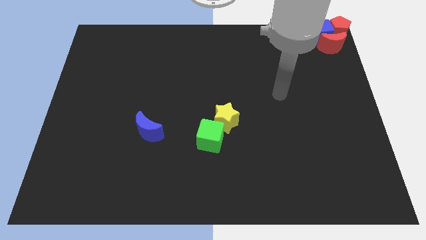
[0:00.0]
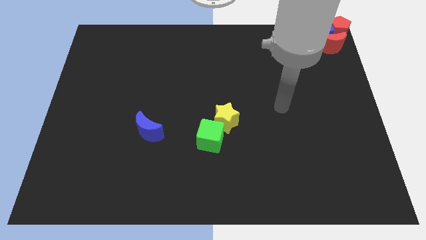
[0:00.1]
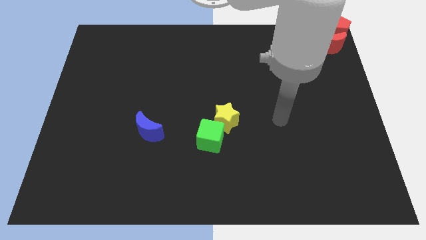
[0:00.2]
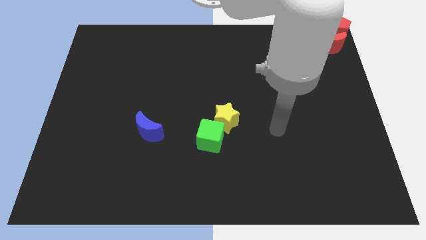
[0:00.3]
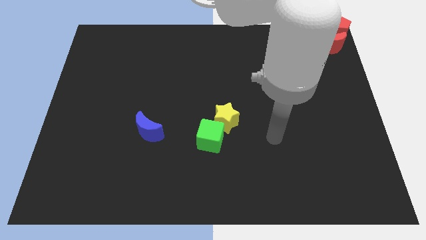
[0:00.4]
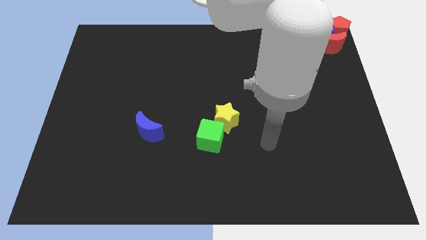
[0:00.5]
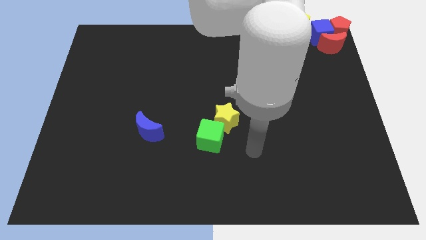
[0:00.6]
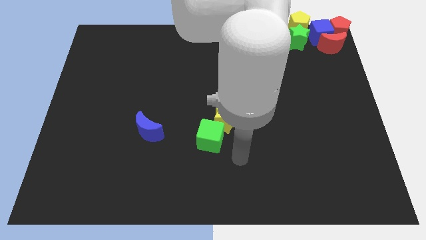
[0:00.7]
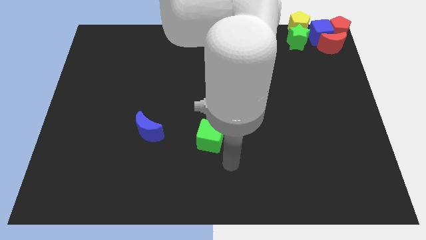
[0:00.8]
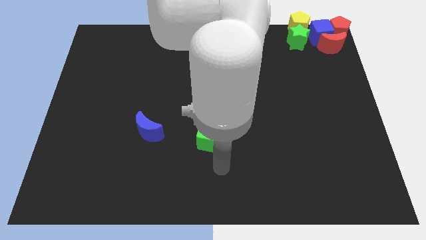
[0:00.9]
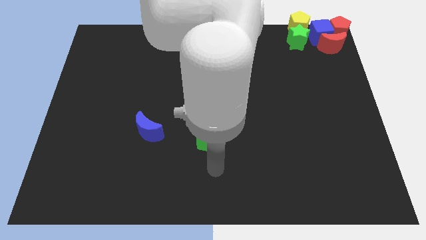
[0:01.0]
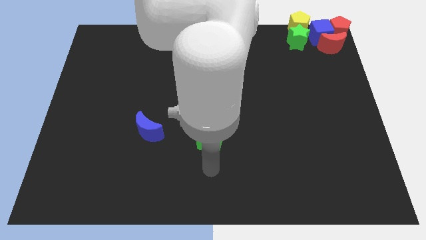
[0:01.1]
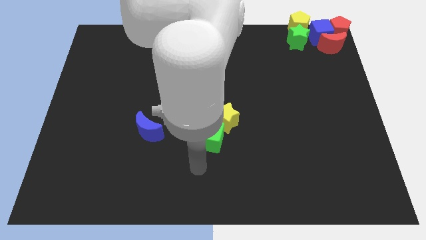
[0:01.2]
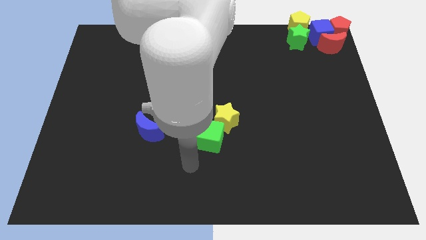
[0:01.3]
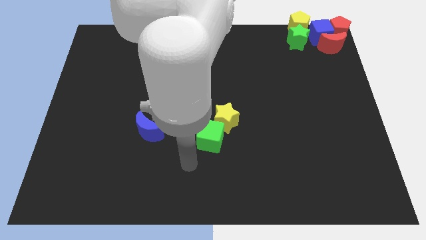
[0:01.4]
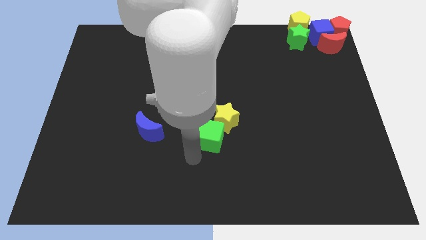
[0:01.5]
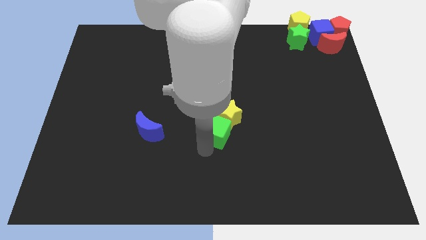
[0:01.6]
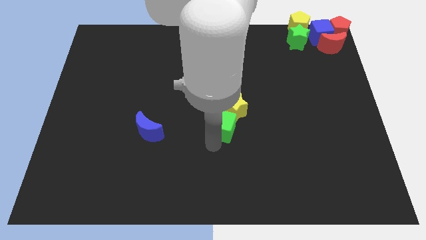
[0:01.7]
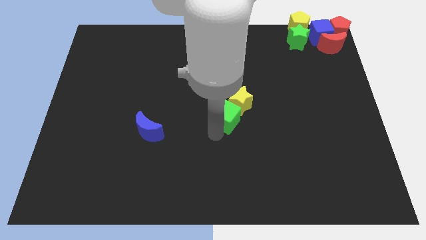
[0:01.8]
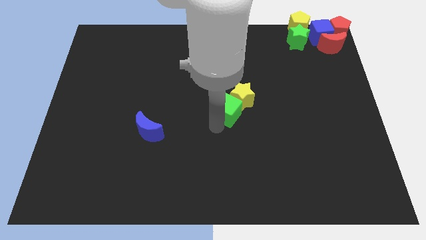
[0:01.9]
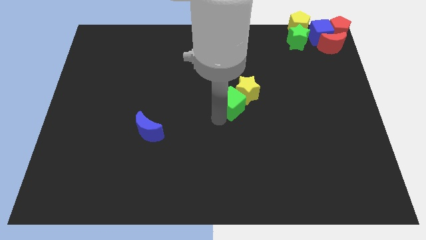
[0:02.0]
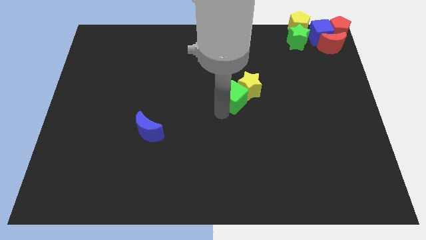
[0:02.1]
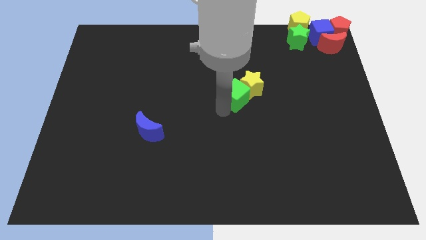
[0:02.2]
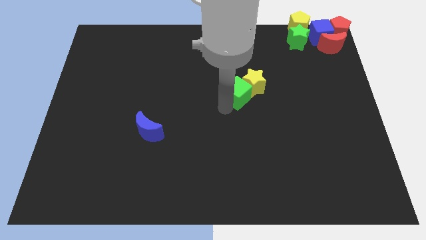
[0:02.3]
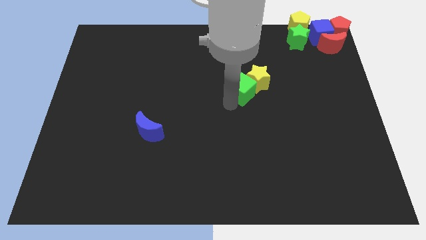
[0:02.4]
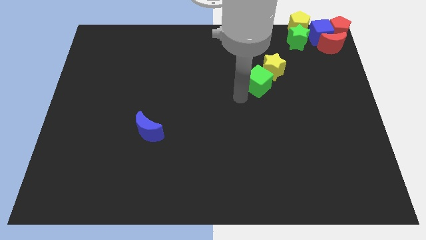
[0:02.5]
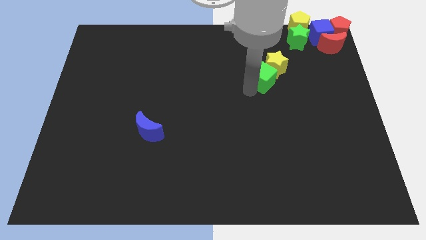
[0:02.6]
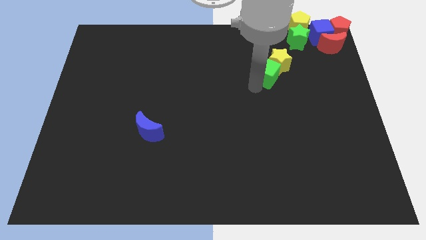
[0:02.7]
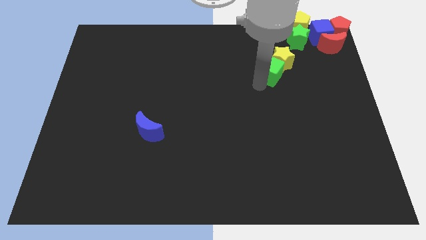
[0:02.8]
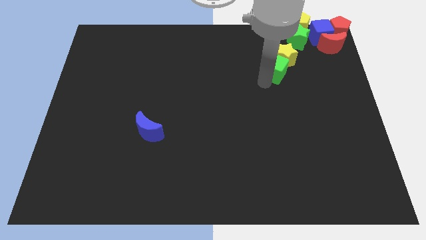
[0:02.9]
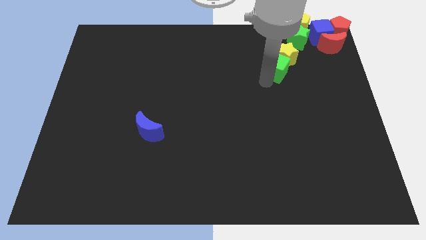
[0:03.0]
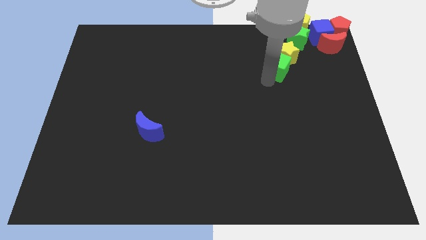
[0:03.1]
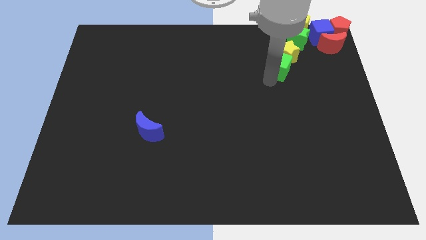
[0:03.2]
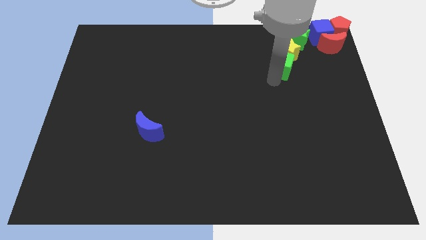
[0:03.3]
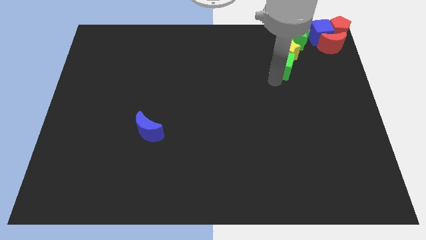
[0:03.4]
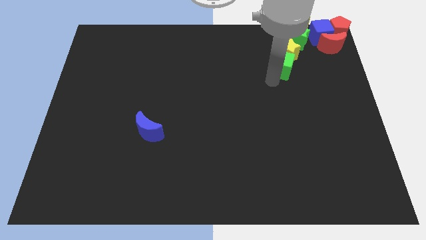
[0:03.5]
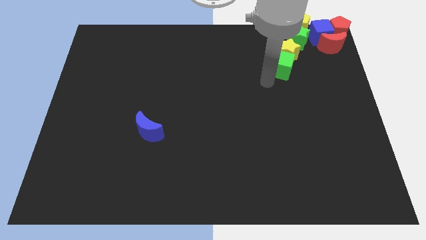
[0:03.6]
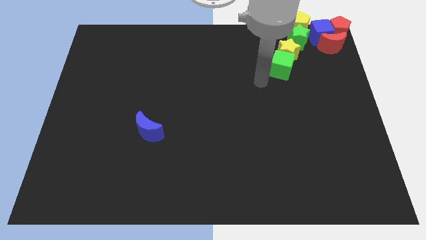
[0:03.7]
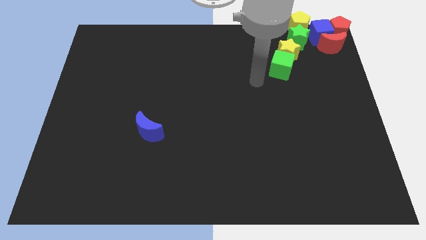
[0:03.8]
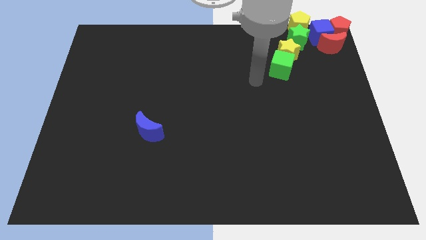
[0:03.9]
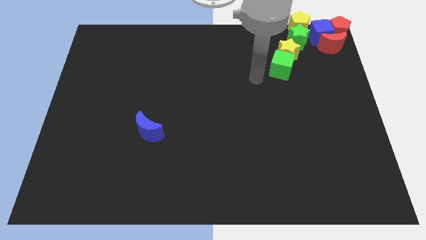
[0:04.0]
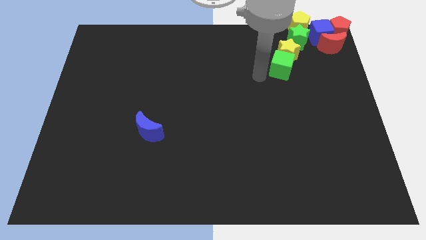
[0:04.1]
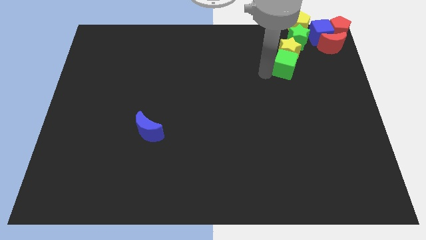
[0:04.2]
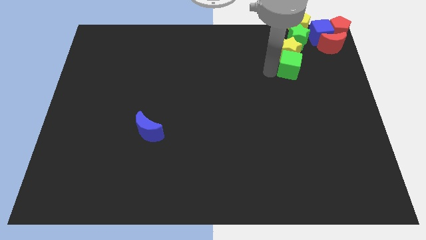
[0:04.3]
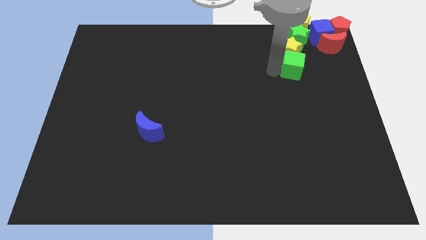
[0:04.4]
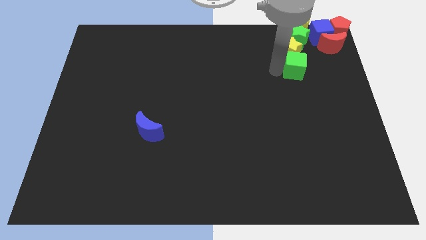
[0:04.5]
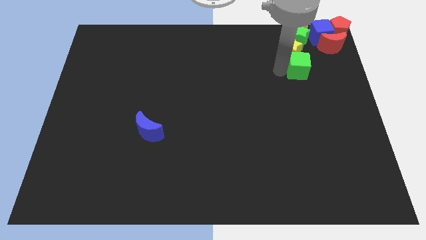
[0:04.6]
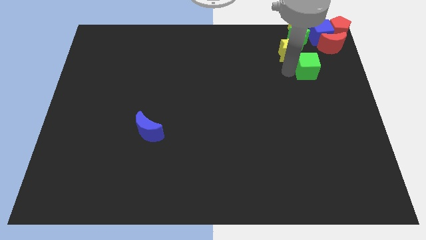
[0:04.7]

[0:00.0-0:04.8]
push the green cube along with yellow star towards green star

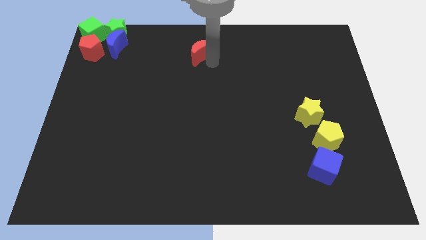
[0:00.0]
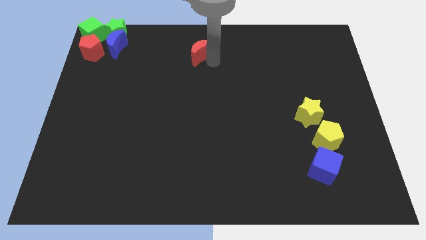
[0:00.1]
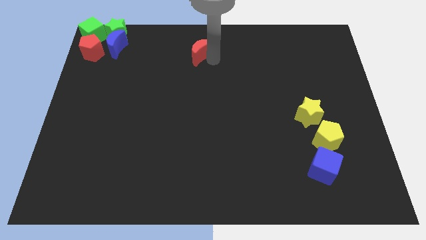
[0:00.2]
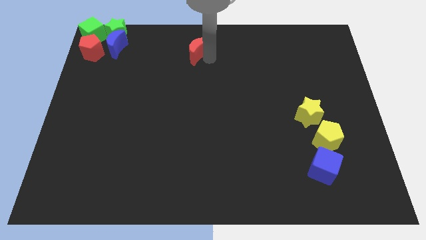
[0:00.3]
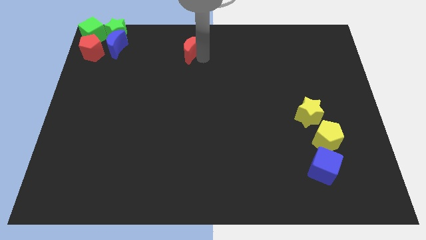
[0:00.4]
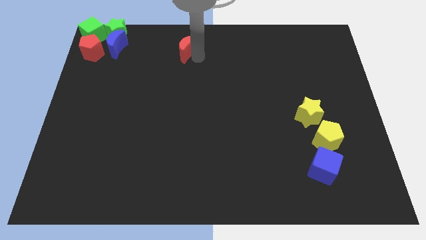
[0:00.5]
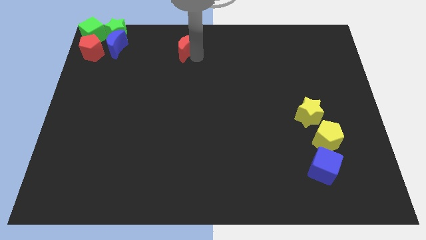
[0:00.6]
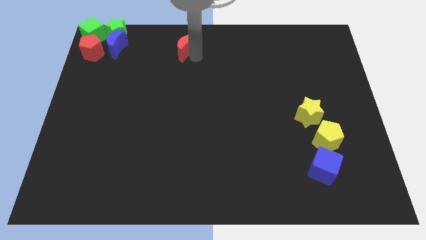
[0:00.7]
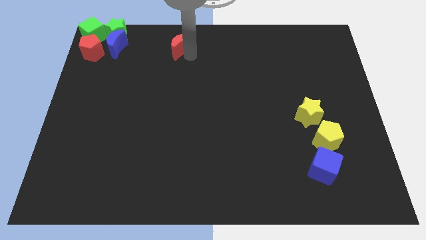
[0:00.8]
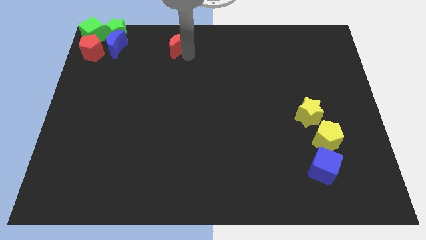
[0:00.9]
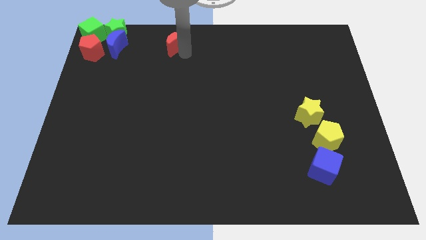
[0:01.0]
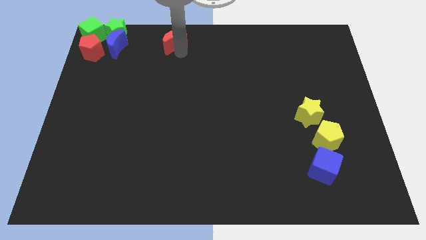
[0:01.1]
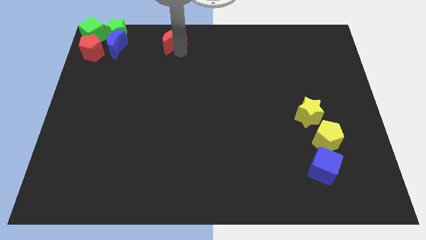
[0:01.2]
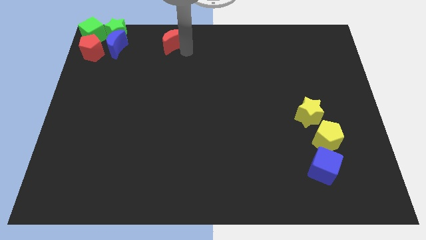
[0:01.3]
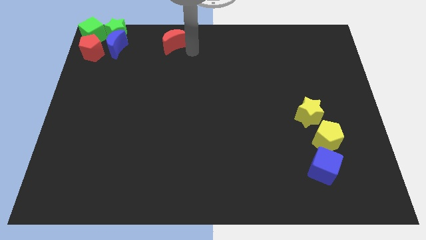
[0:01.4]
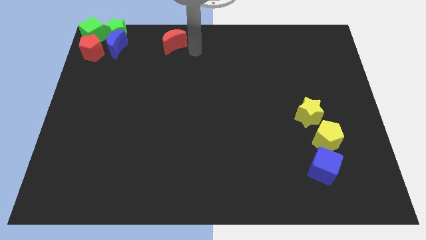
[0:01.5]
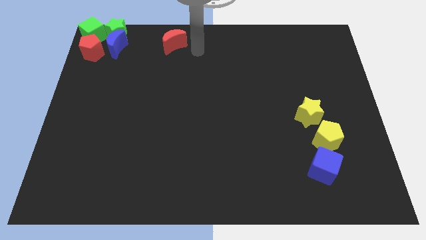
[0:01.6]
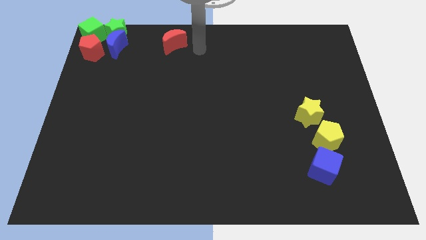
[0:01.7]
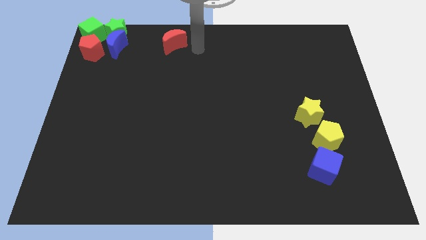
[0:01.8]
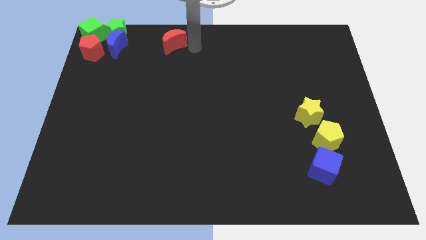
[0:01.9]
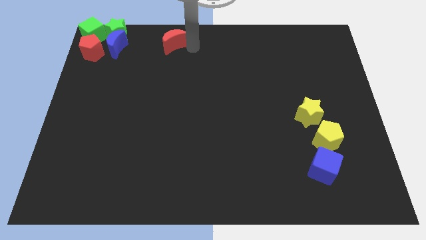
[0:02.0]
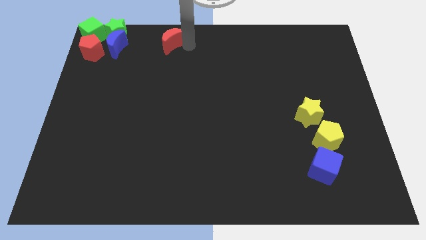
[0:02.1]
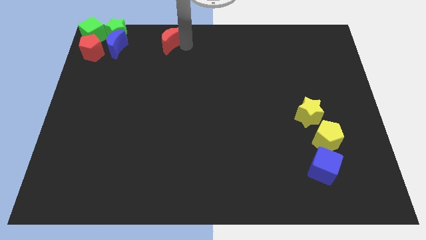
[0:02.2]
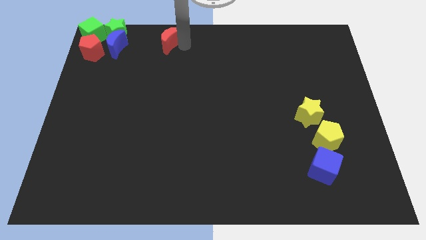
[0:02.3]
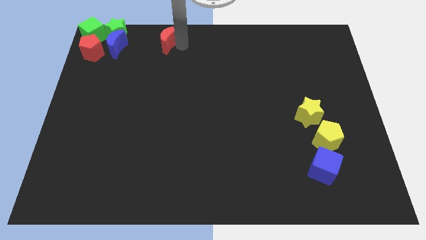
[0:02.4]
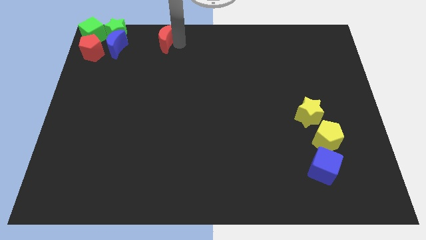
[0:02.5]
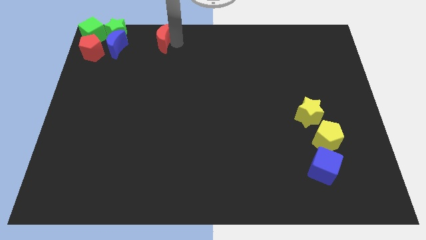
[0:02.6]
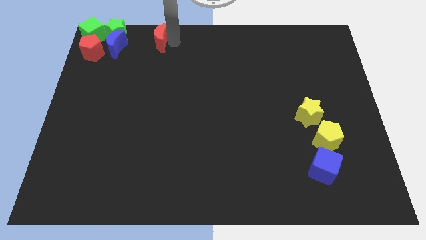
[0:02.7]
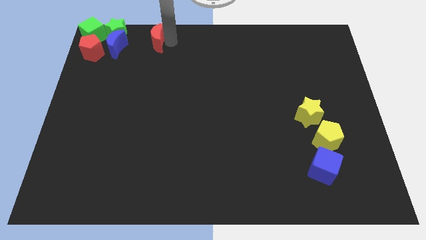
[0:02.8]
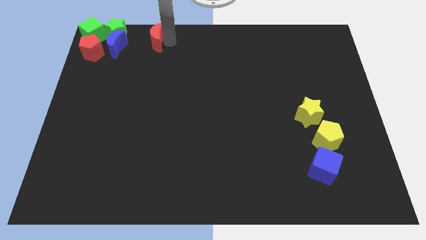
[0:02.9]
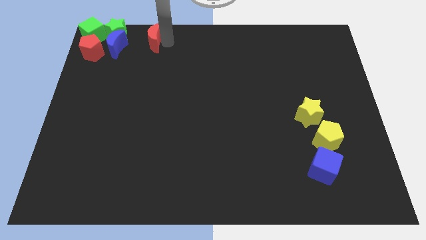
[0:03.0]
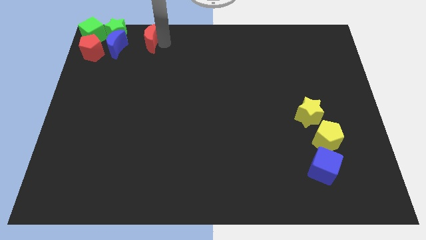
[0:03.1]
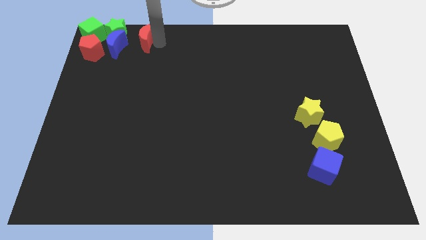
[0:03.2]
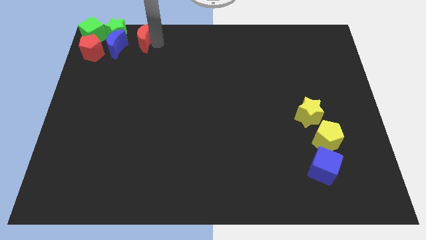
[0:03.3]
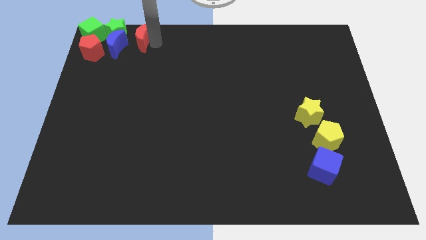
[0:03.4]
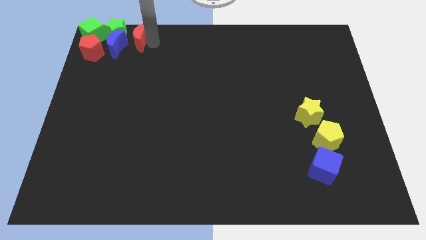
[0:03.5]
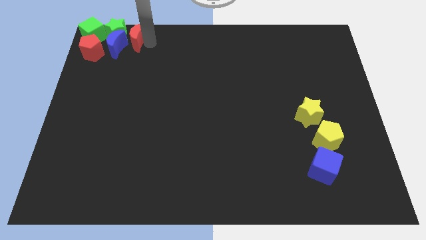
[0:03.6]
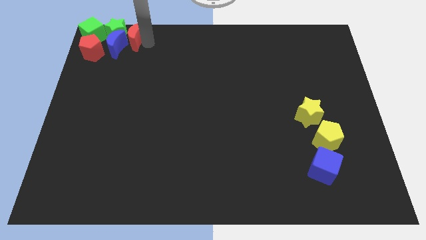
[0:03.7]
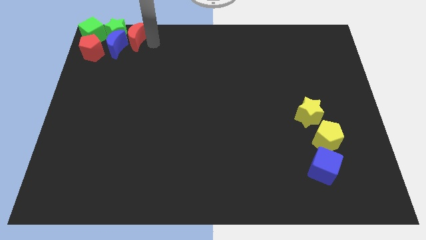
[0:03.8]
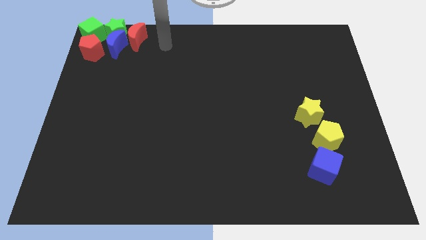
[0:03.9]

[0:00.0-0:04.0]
push the red crescent to the top right of blue crescent
